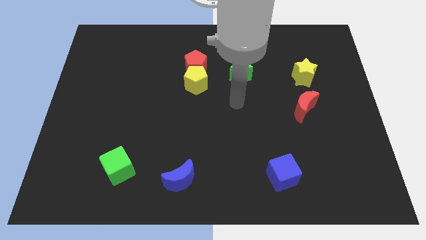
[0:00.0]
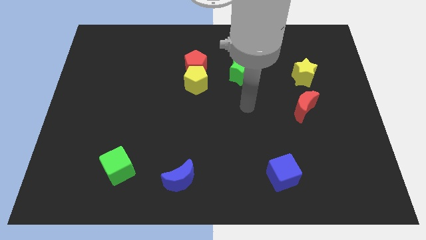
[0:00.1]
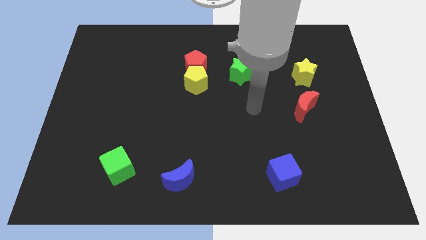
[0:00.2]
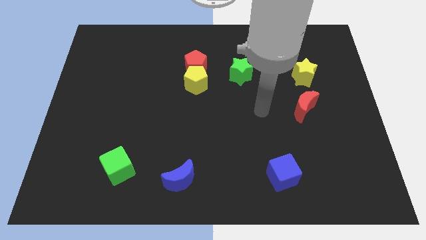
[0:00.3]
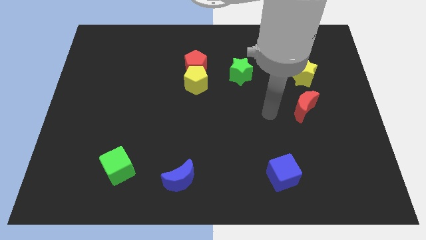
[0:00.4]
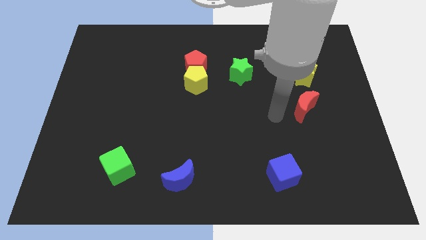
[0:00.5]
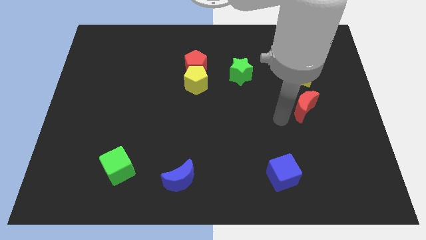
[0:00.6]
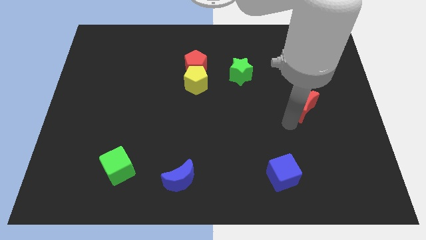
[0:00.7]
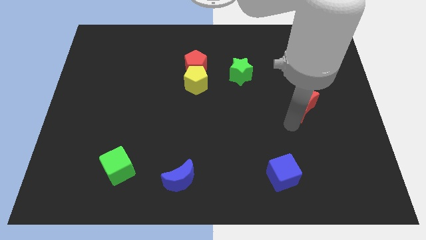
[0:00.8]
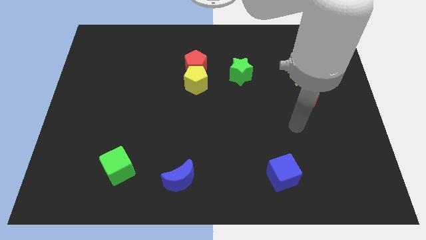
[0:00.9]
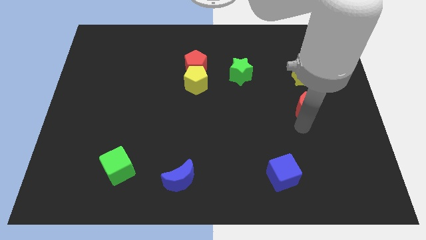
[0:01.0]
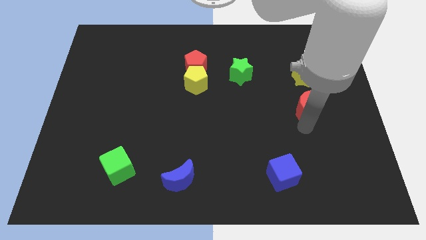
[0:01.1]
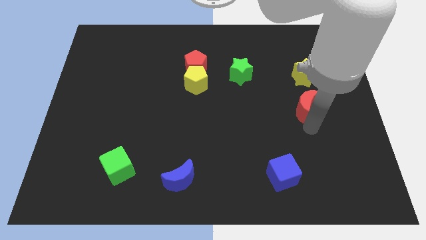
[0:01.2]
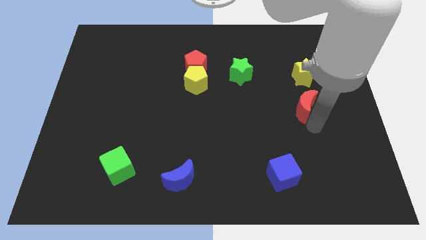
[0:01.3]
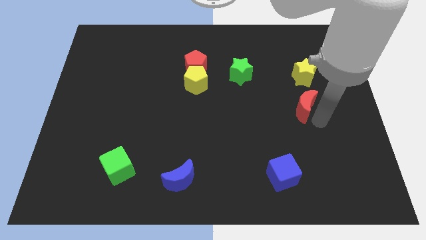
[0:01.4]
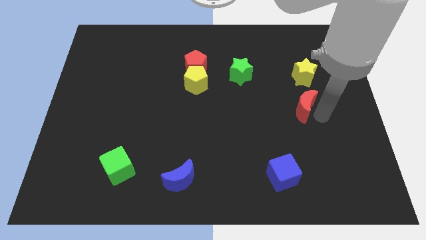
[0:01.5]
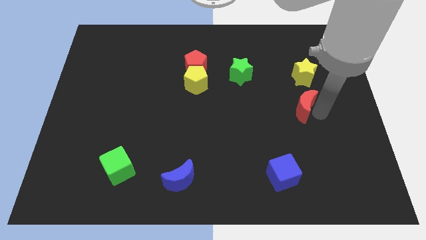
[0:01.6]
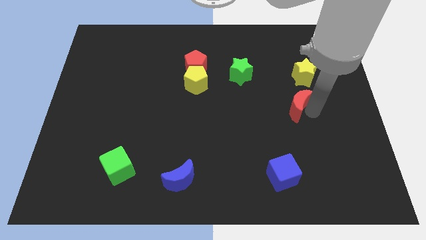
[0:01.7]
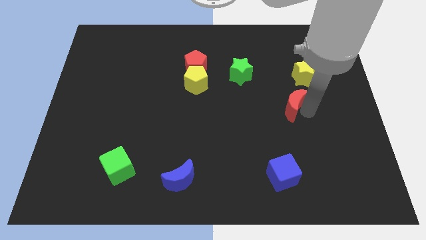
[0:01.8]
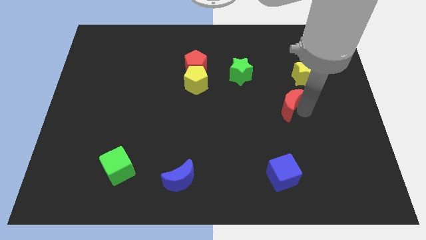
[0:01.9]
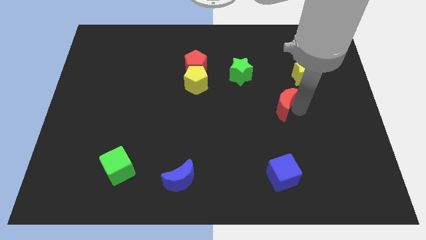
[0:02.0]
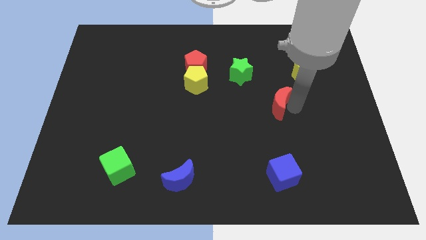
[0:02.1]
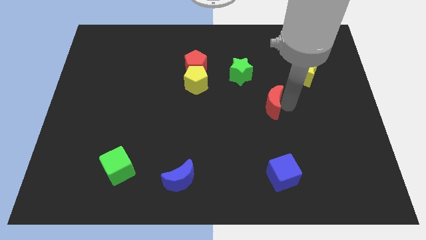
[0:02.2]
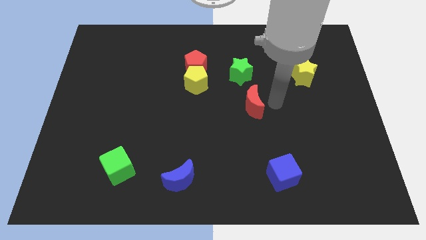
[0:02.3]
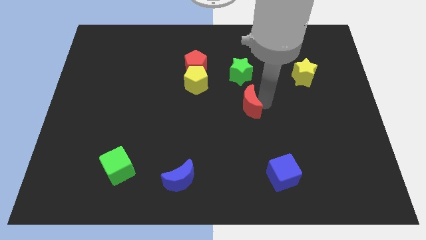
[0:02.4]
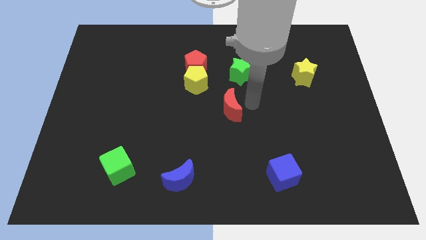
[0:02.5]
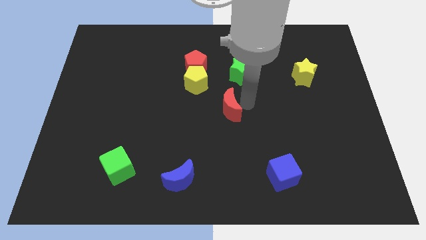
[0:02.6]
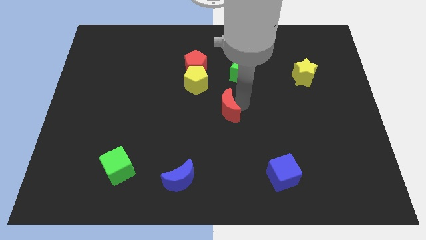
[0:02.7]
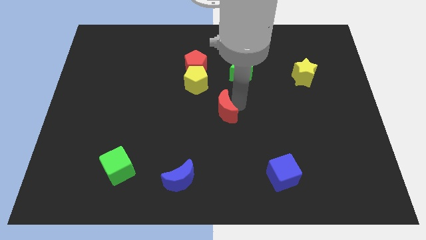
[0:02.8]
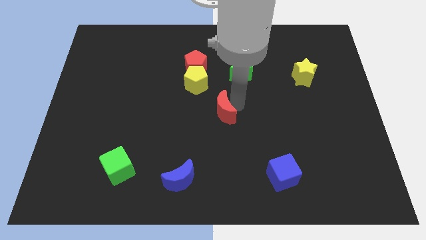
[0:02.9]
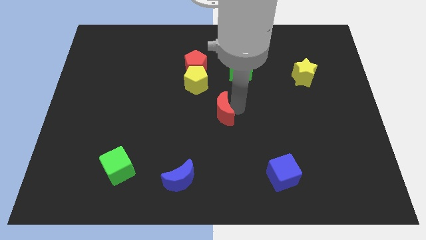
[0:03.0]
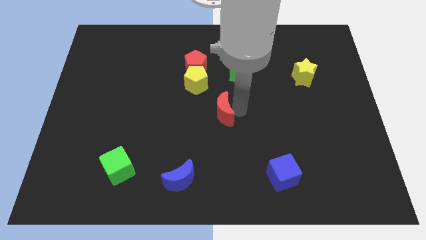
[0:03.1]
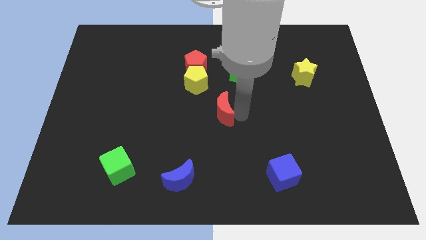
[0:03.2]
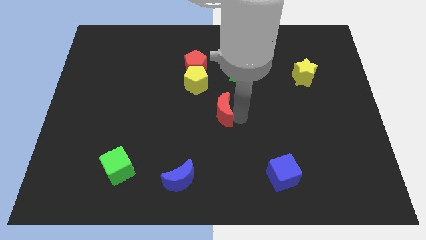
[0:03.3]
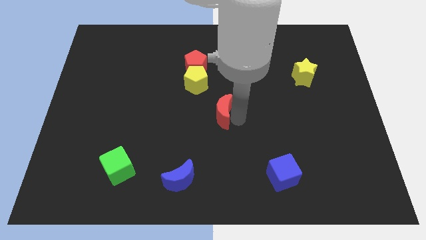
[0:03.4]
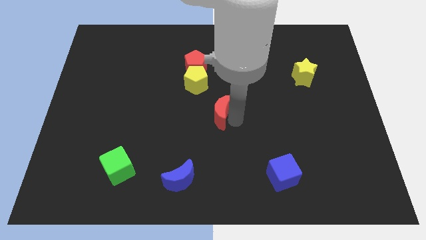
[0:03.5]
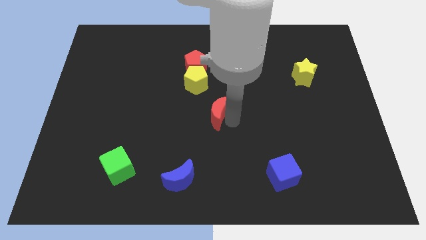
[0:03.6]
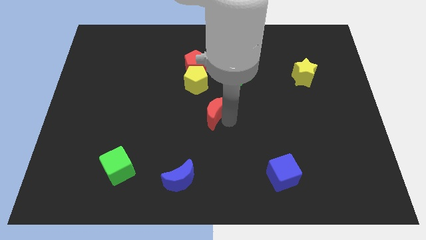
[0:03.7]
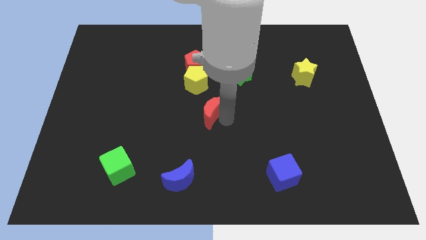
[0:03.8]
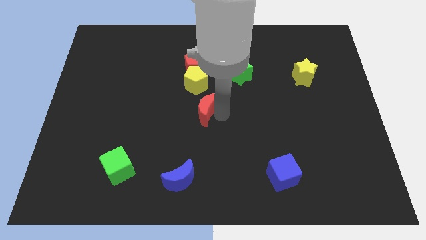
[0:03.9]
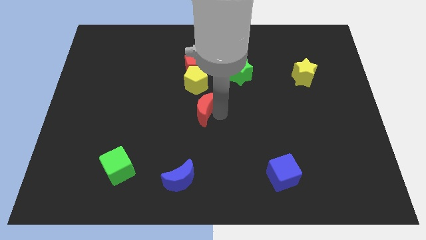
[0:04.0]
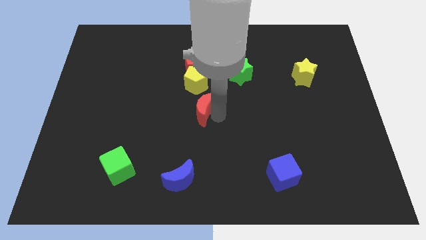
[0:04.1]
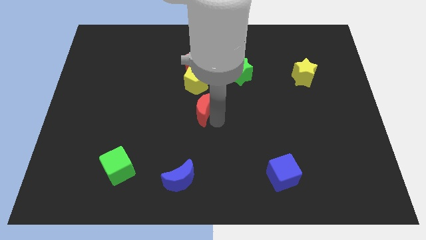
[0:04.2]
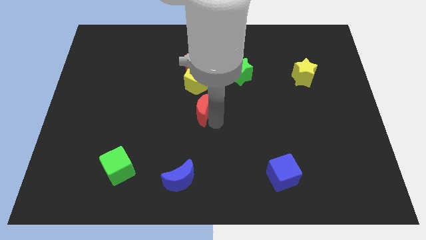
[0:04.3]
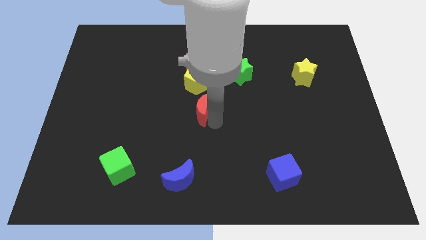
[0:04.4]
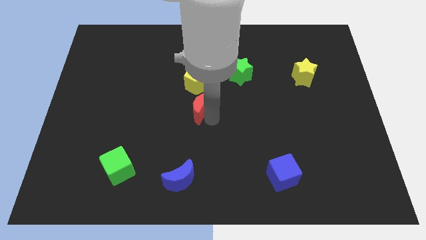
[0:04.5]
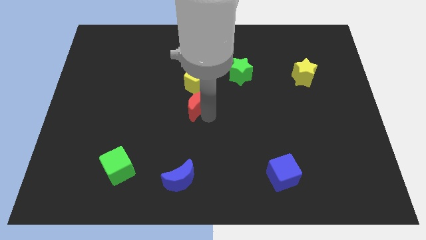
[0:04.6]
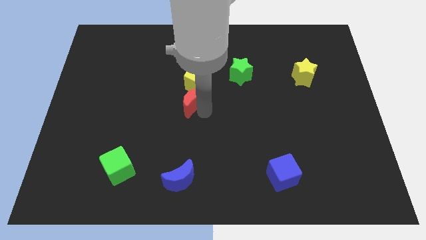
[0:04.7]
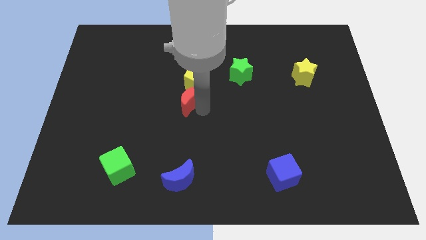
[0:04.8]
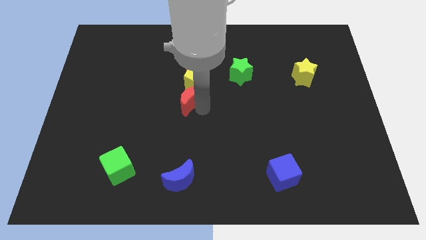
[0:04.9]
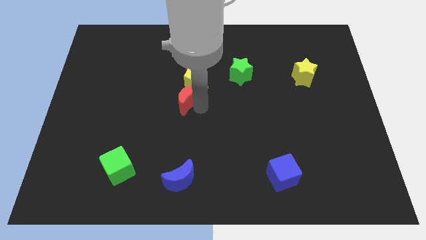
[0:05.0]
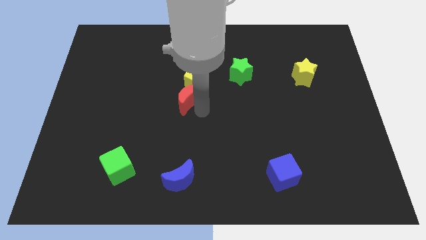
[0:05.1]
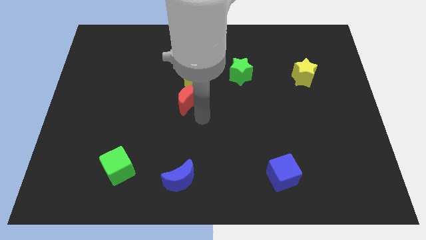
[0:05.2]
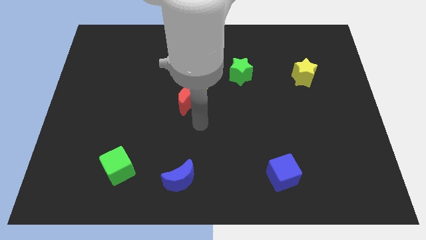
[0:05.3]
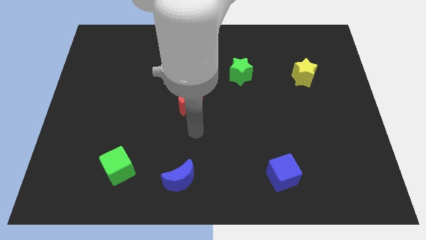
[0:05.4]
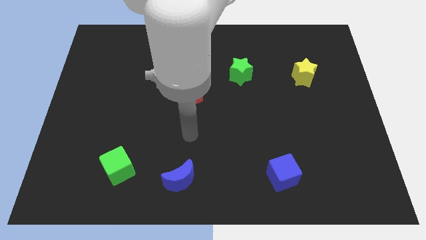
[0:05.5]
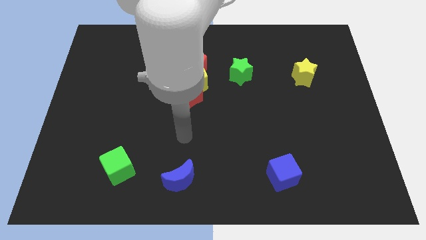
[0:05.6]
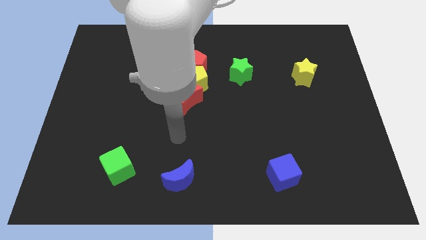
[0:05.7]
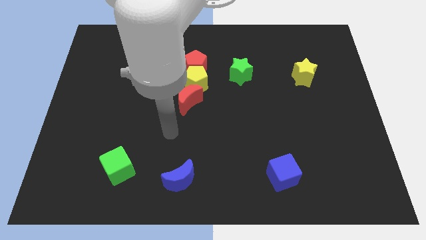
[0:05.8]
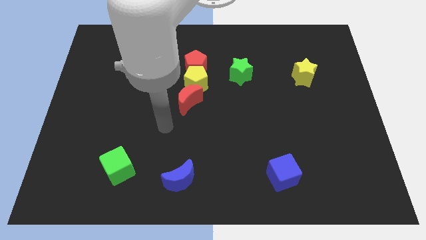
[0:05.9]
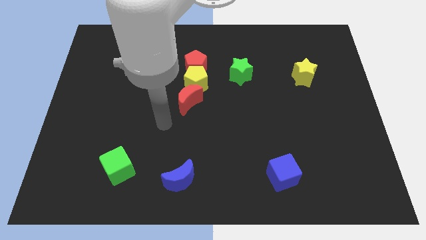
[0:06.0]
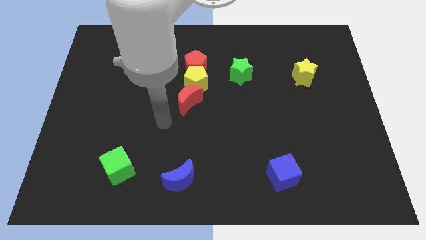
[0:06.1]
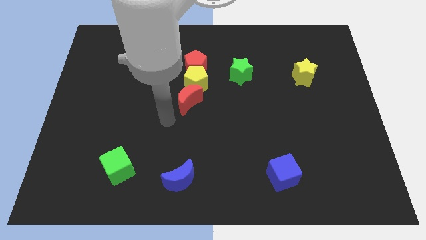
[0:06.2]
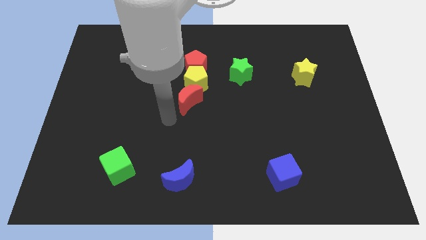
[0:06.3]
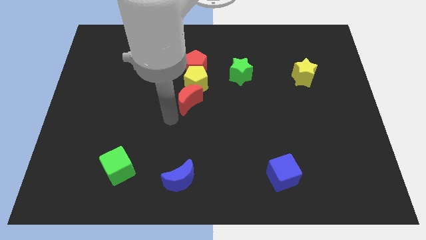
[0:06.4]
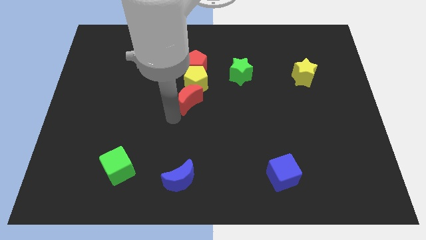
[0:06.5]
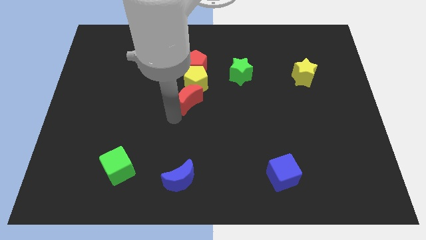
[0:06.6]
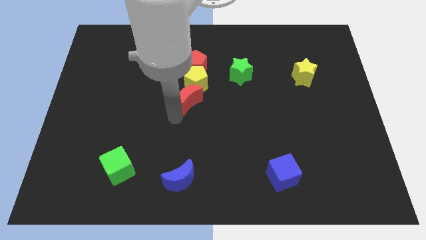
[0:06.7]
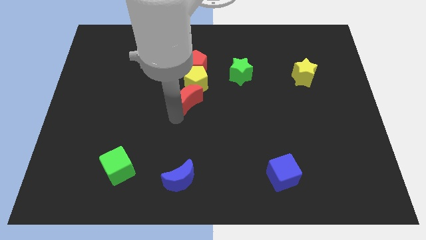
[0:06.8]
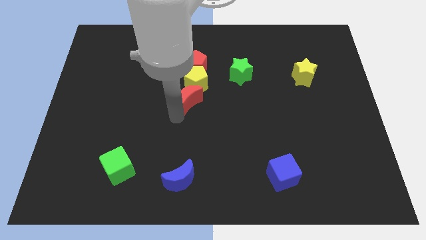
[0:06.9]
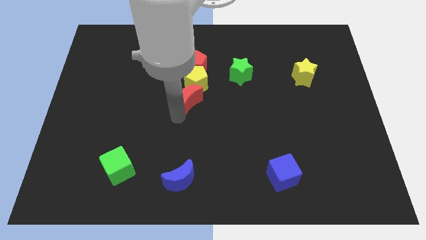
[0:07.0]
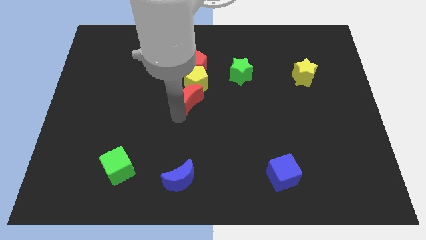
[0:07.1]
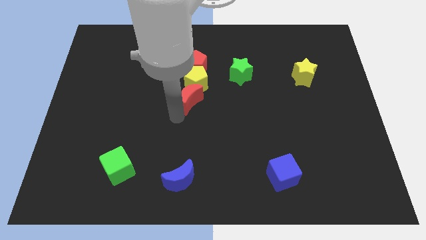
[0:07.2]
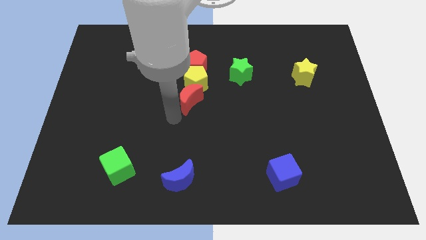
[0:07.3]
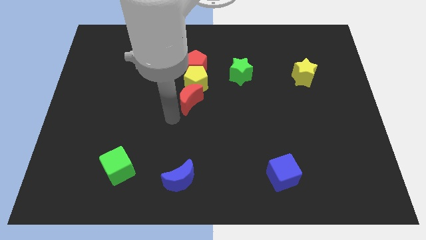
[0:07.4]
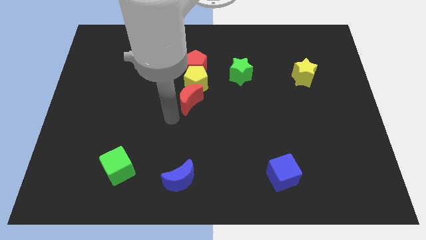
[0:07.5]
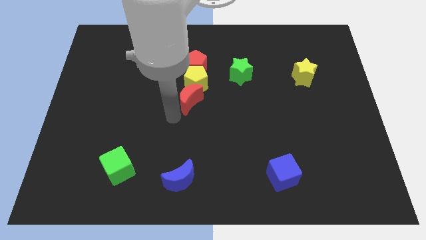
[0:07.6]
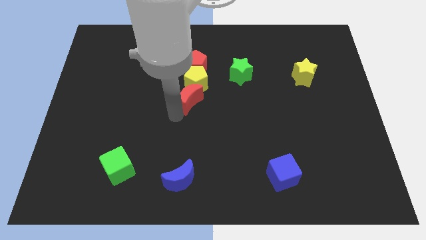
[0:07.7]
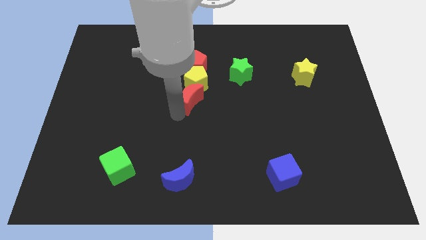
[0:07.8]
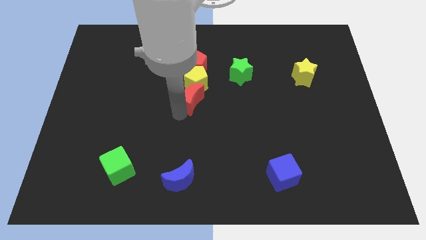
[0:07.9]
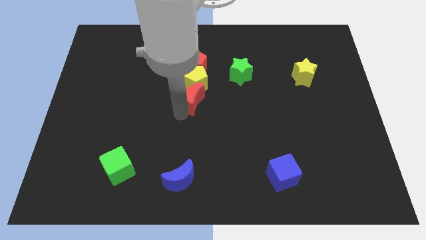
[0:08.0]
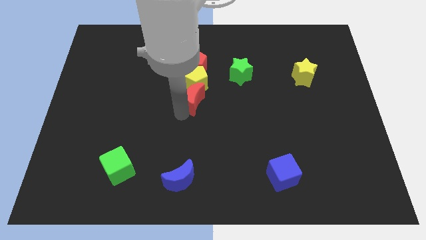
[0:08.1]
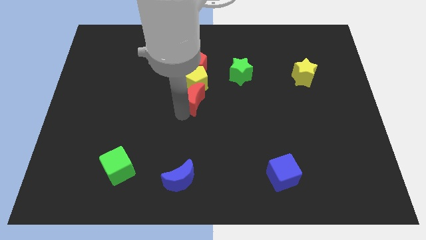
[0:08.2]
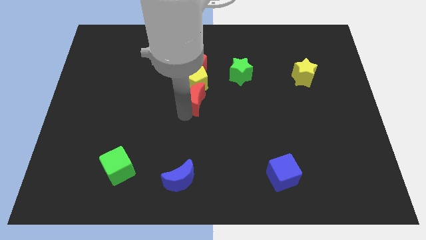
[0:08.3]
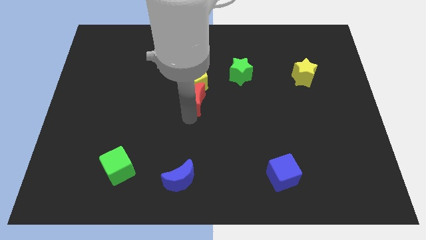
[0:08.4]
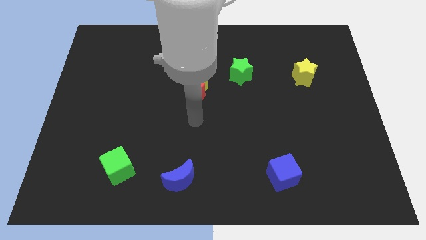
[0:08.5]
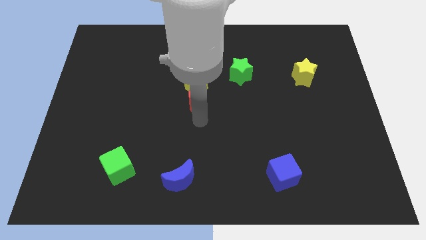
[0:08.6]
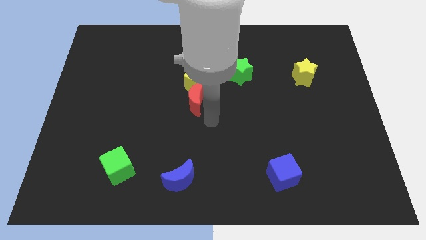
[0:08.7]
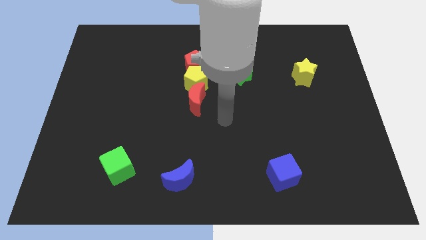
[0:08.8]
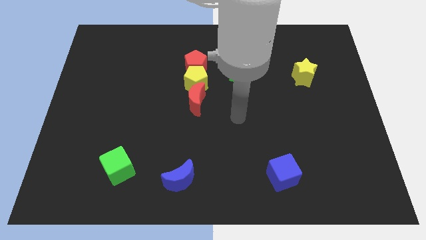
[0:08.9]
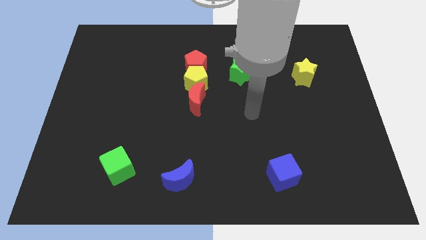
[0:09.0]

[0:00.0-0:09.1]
place the red moon vertically below the yellow pentagon
